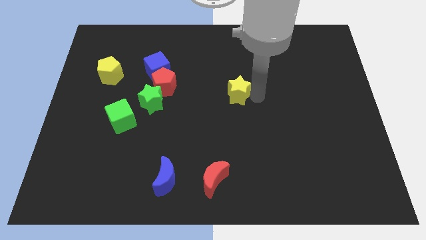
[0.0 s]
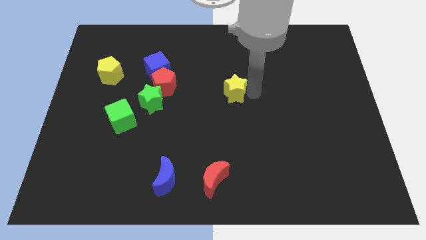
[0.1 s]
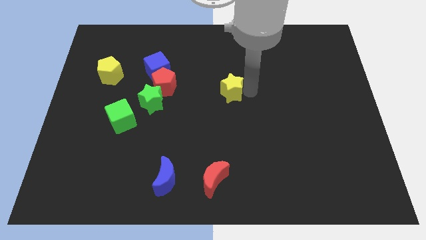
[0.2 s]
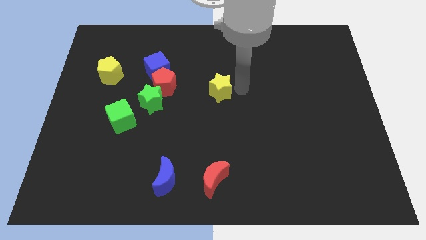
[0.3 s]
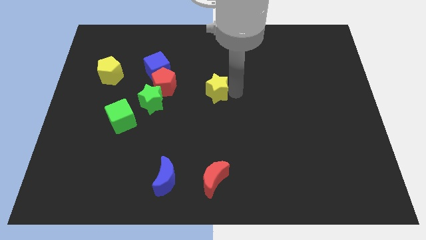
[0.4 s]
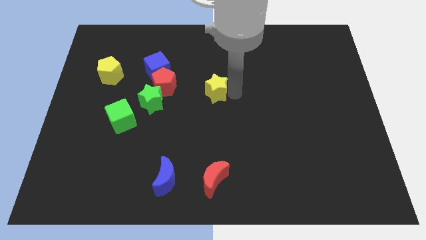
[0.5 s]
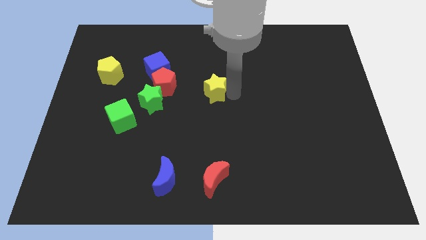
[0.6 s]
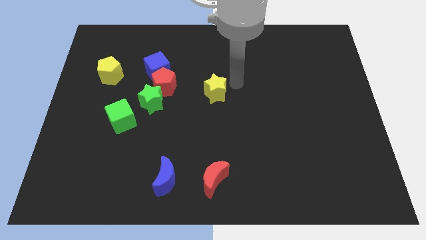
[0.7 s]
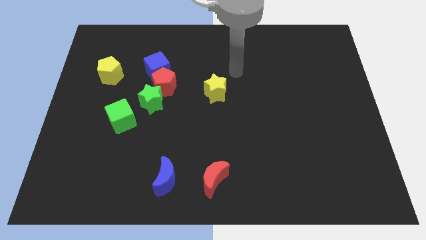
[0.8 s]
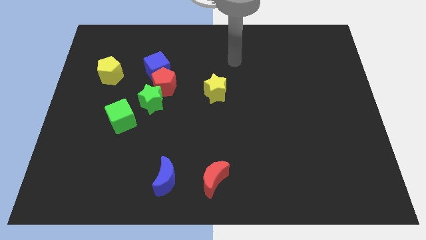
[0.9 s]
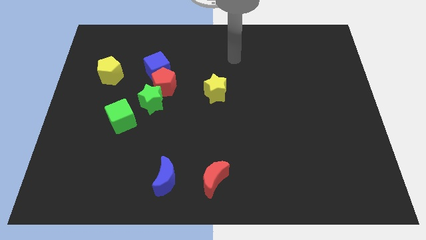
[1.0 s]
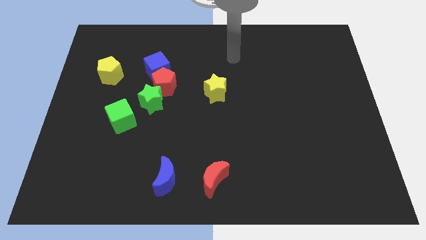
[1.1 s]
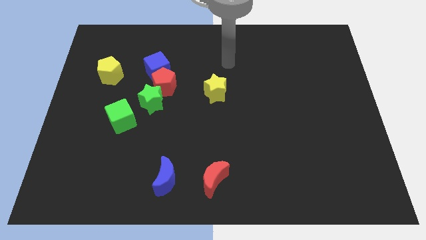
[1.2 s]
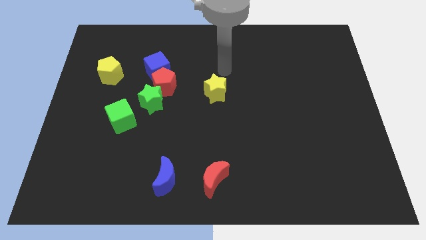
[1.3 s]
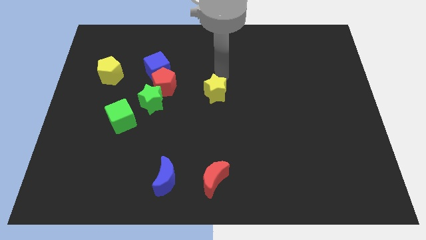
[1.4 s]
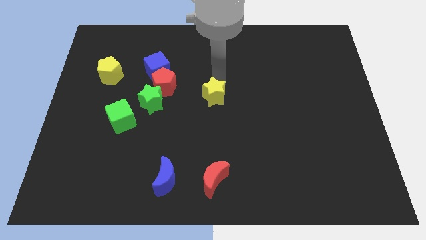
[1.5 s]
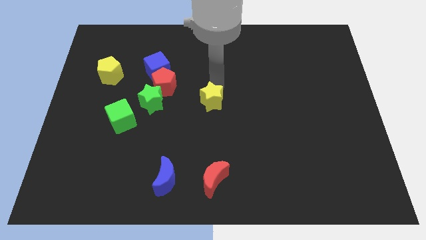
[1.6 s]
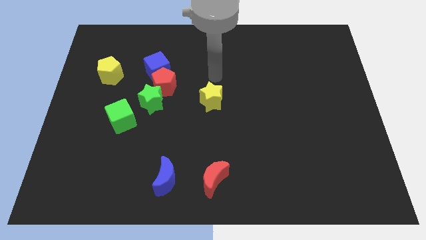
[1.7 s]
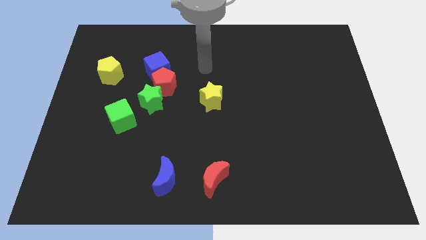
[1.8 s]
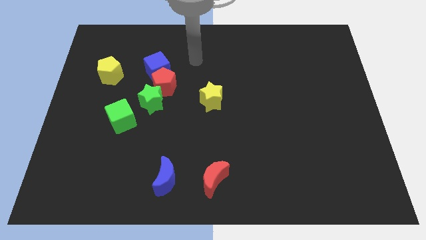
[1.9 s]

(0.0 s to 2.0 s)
place the yellow star at the center of the board

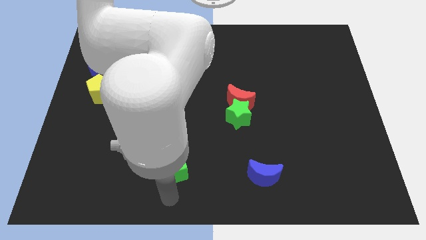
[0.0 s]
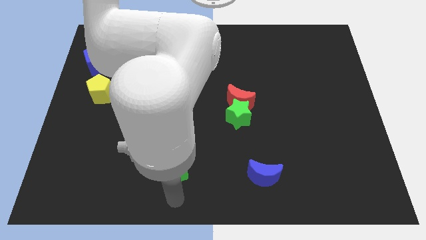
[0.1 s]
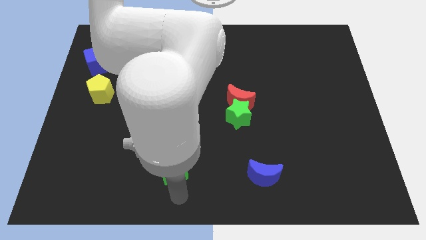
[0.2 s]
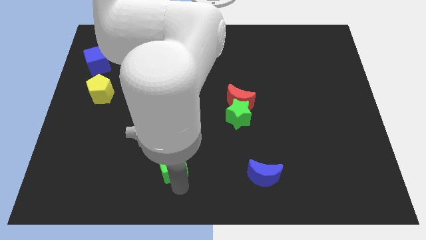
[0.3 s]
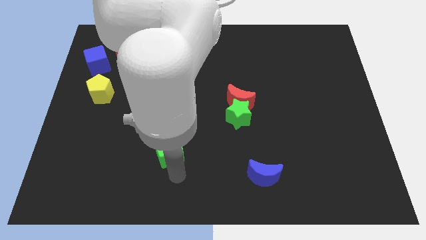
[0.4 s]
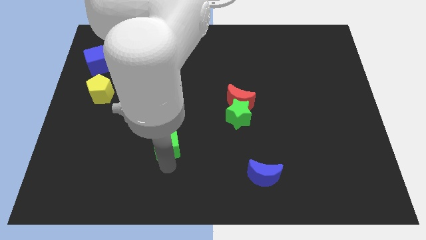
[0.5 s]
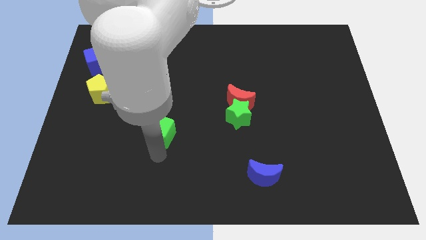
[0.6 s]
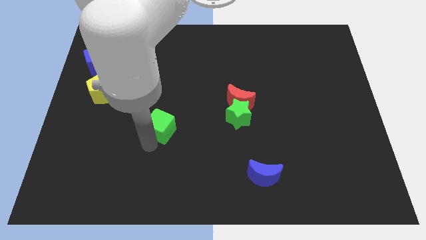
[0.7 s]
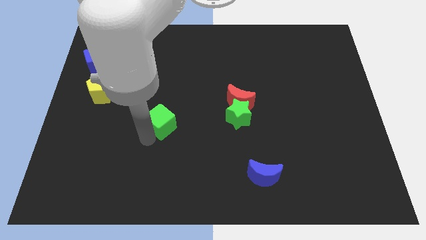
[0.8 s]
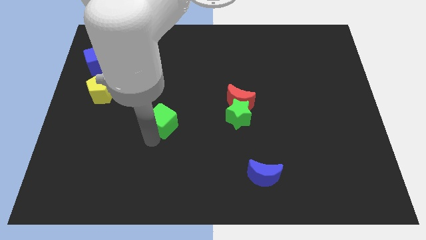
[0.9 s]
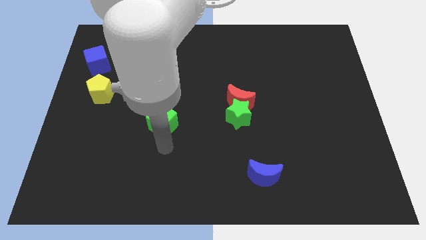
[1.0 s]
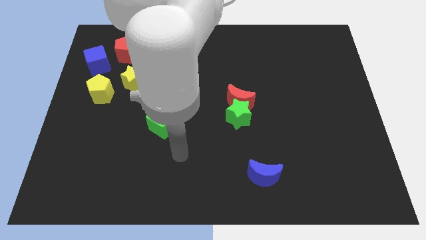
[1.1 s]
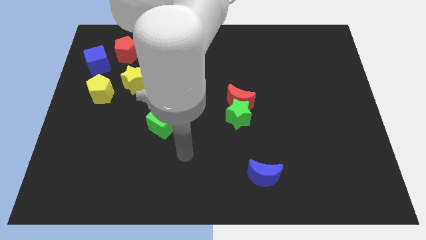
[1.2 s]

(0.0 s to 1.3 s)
push the green cube to the left of the green star

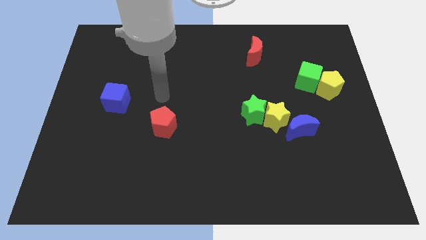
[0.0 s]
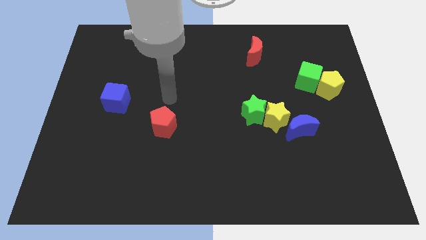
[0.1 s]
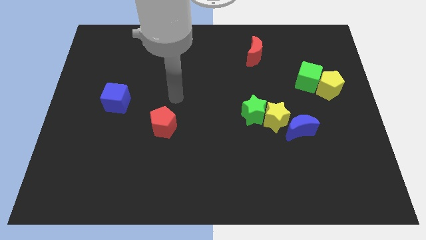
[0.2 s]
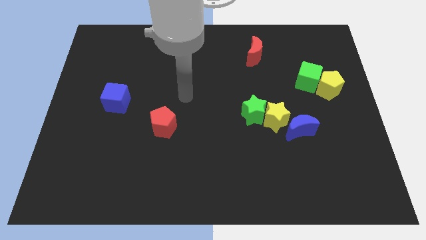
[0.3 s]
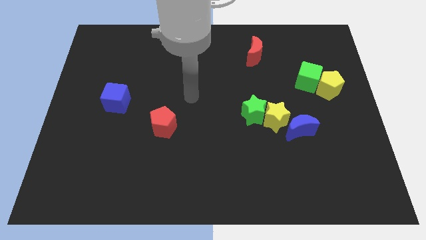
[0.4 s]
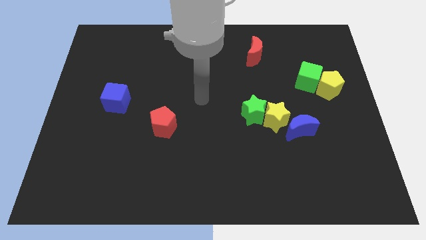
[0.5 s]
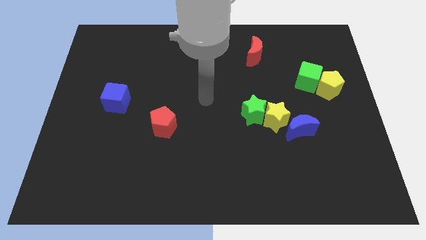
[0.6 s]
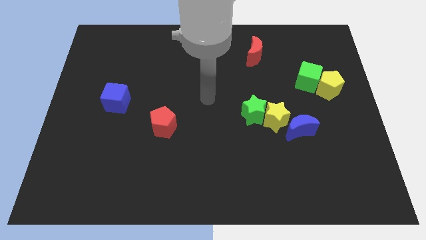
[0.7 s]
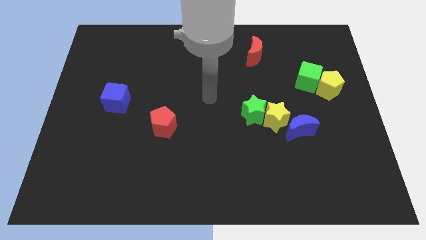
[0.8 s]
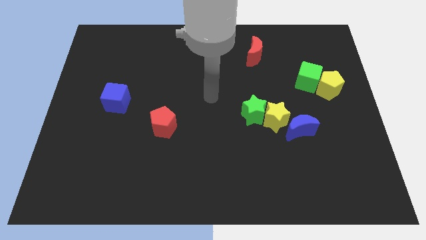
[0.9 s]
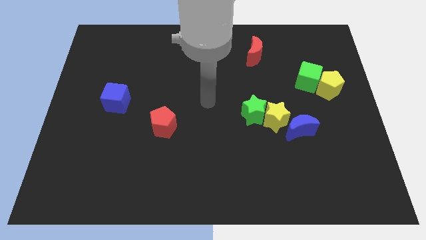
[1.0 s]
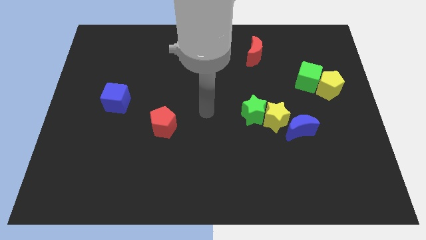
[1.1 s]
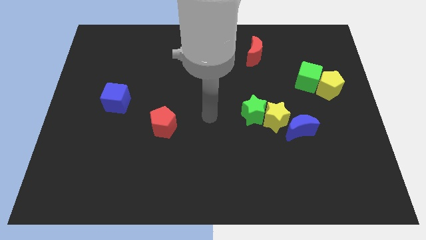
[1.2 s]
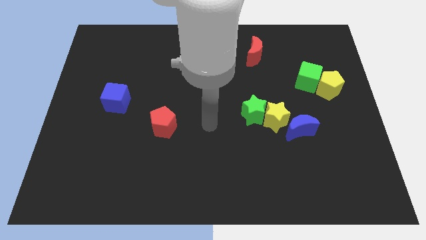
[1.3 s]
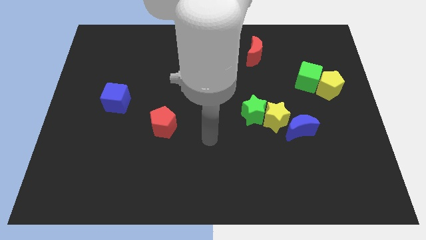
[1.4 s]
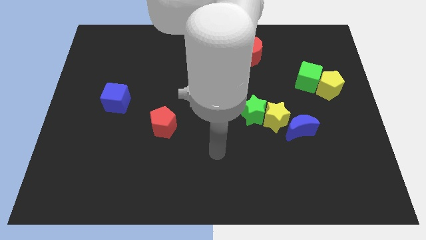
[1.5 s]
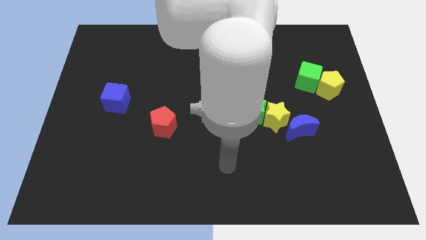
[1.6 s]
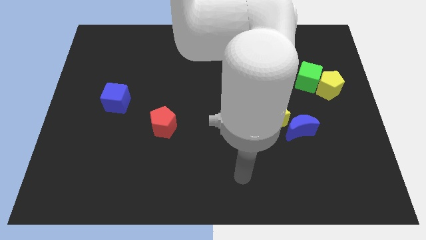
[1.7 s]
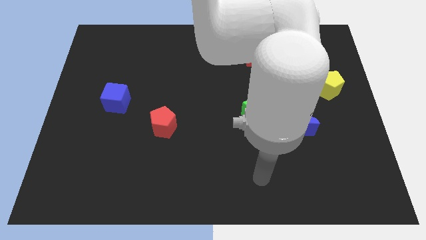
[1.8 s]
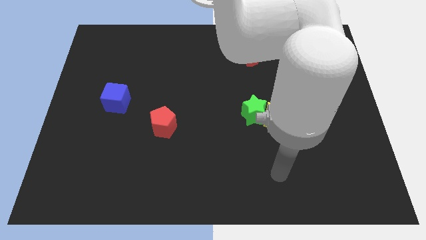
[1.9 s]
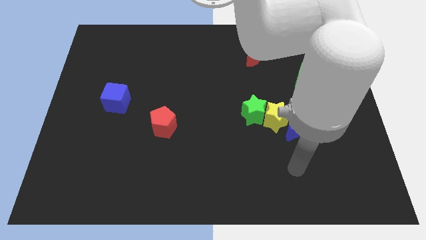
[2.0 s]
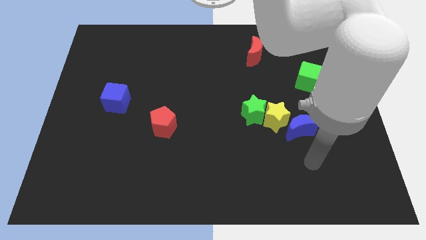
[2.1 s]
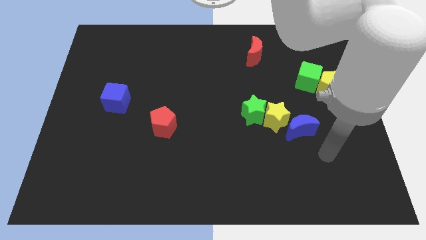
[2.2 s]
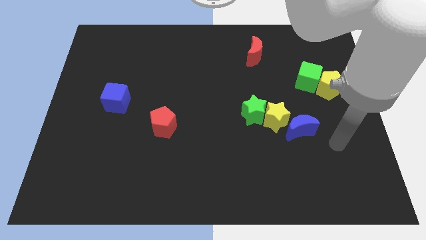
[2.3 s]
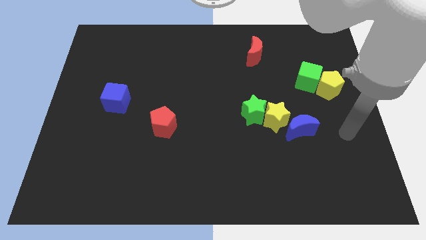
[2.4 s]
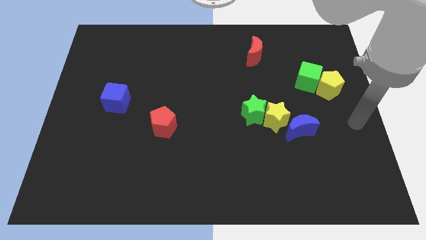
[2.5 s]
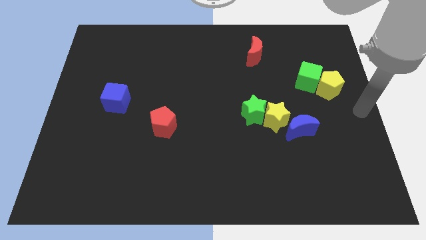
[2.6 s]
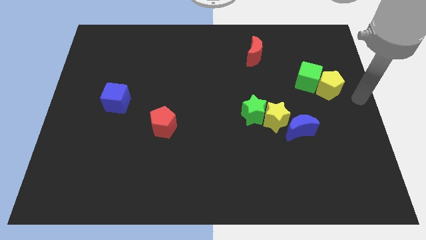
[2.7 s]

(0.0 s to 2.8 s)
point your arm at the center right of the board

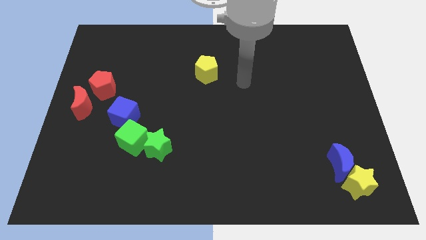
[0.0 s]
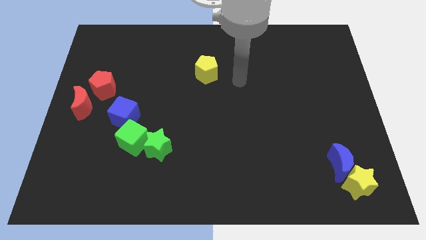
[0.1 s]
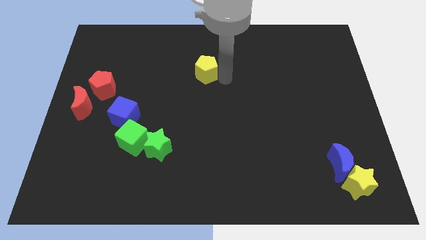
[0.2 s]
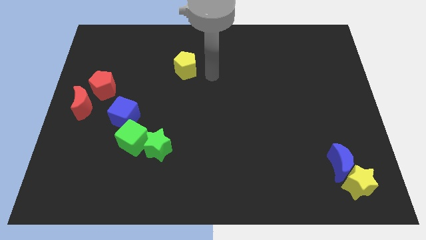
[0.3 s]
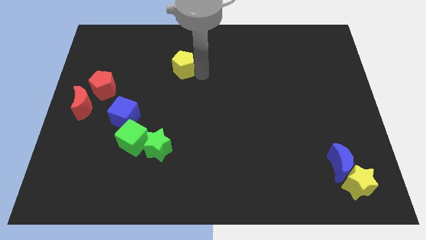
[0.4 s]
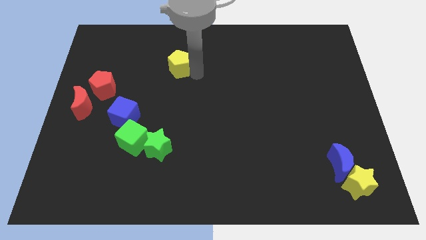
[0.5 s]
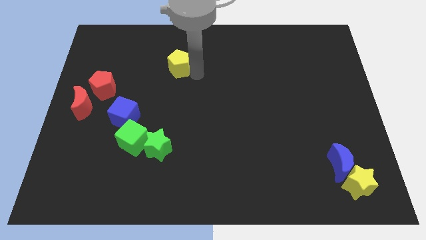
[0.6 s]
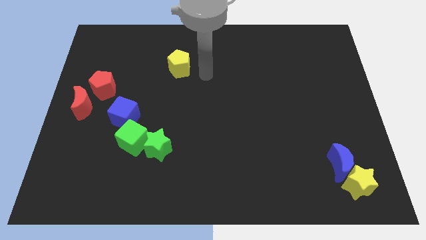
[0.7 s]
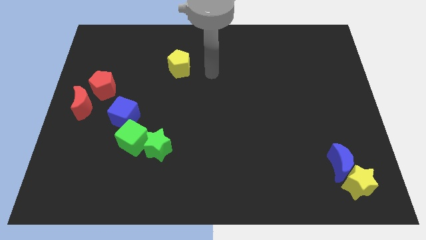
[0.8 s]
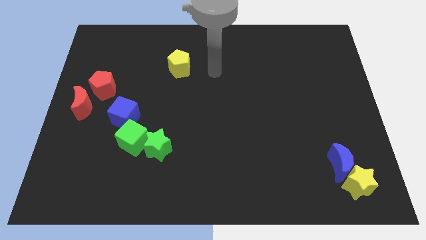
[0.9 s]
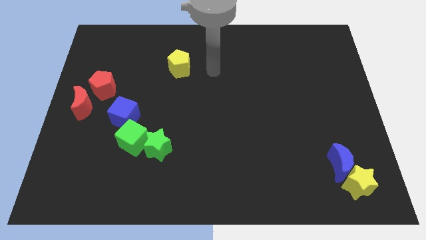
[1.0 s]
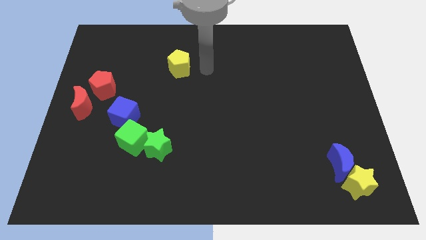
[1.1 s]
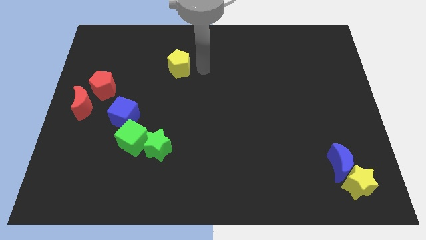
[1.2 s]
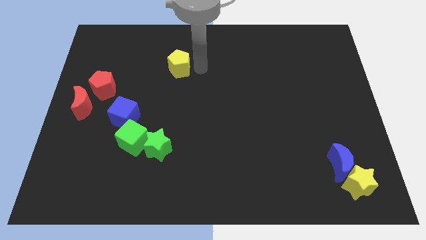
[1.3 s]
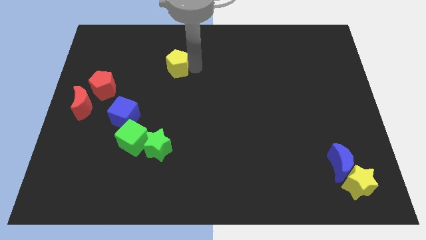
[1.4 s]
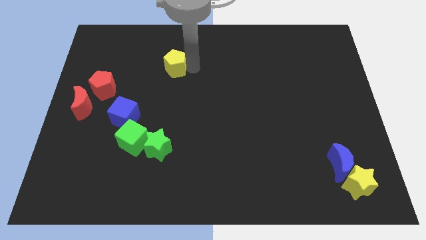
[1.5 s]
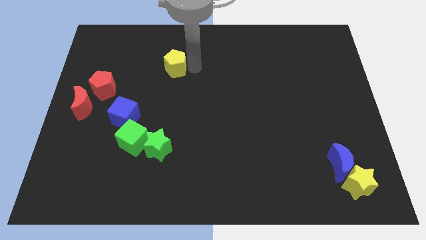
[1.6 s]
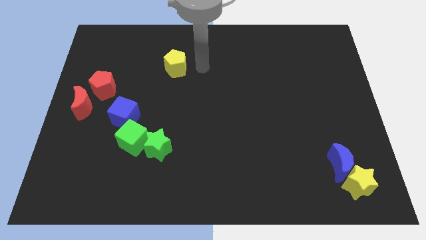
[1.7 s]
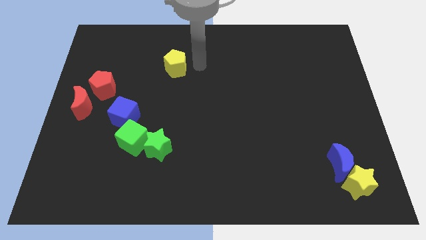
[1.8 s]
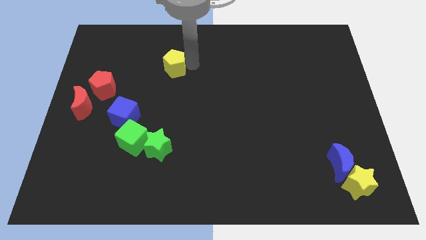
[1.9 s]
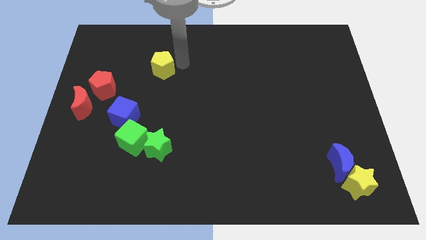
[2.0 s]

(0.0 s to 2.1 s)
place the yellow pentagon abive the red pentagon

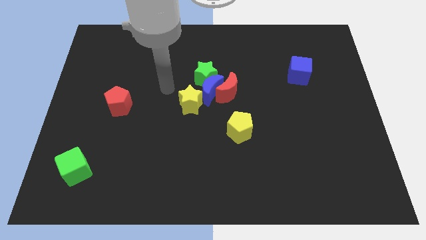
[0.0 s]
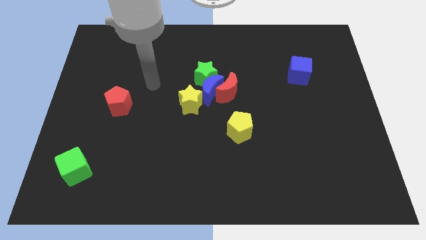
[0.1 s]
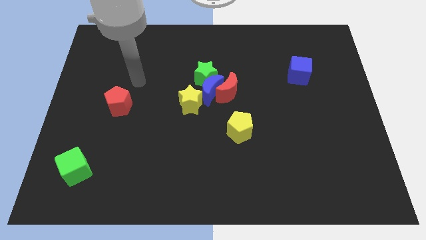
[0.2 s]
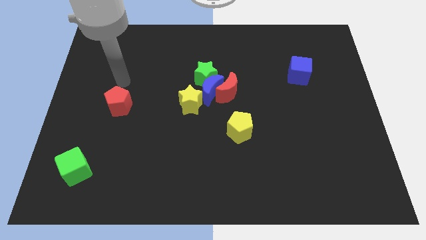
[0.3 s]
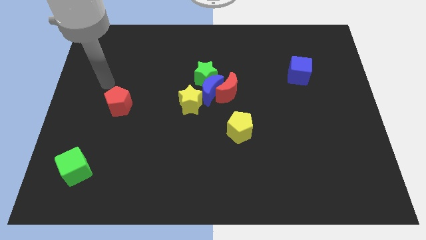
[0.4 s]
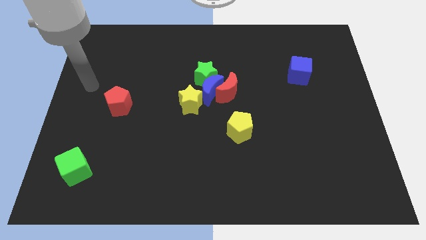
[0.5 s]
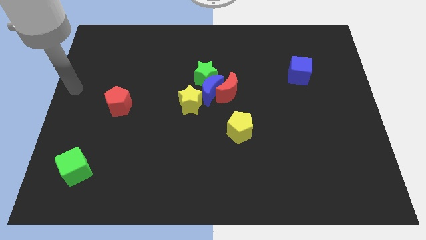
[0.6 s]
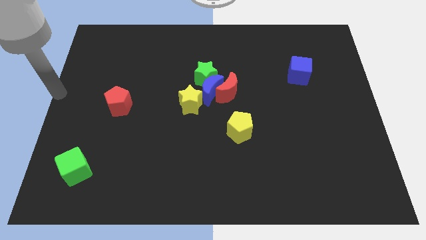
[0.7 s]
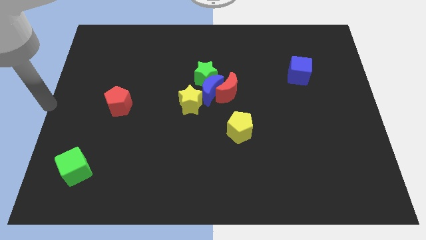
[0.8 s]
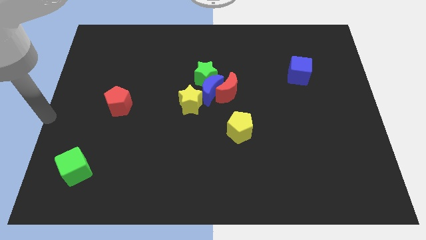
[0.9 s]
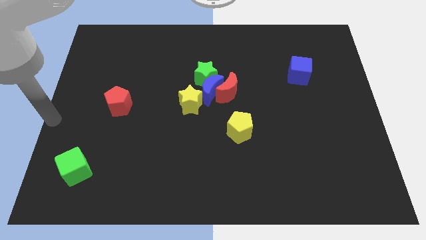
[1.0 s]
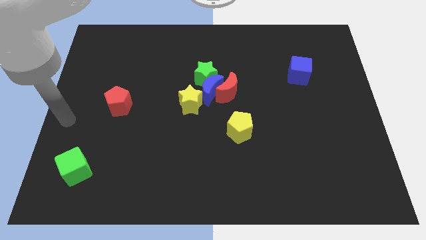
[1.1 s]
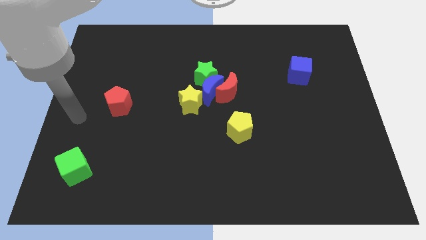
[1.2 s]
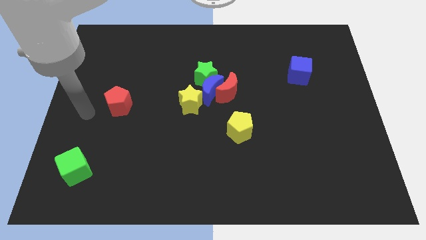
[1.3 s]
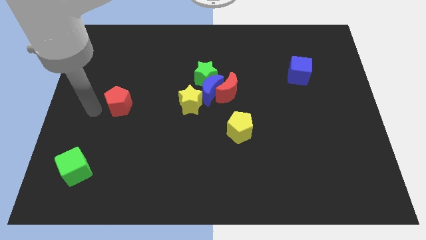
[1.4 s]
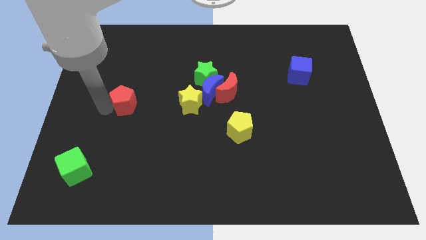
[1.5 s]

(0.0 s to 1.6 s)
tap at the left side of the red pentagon
